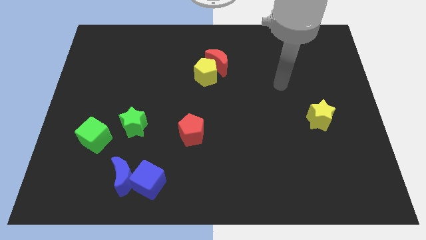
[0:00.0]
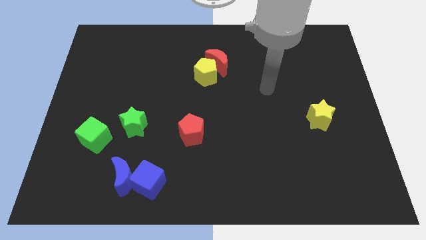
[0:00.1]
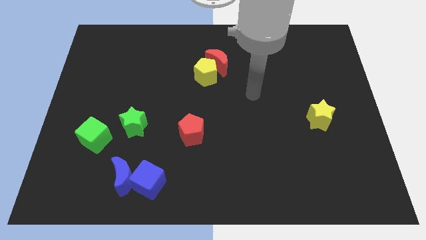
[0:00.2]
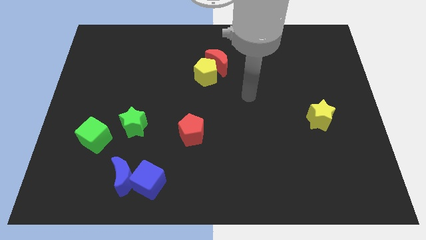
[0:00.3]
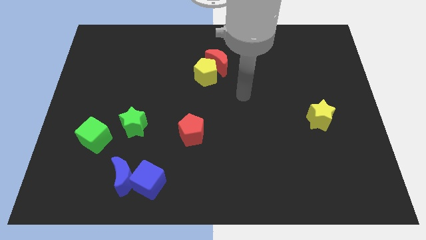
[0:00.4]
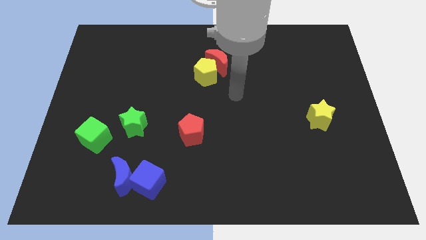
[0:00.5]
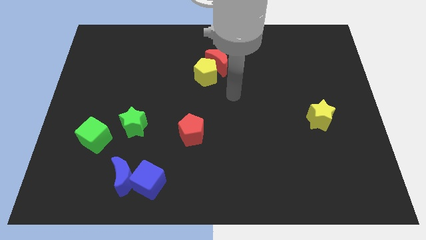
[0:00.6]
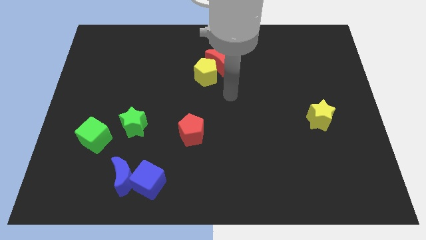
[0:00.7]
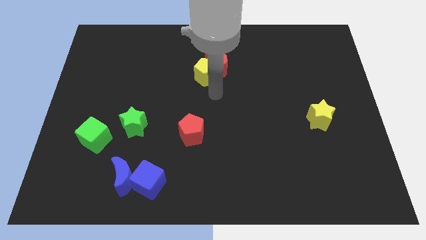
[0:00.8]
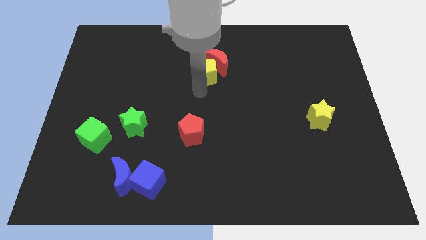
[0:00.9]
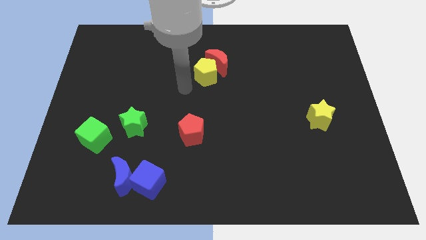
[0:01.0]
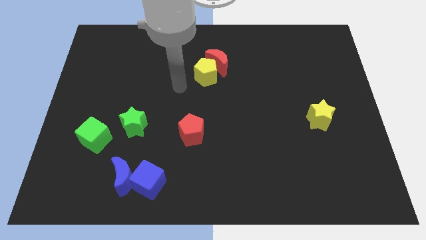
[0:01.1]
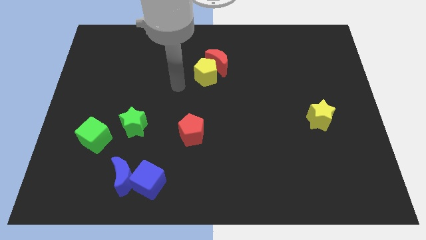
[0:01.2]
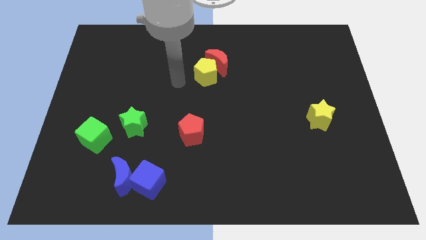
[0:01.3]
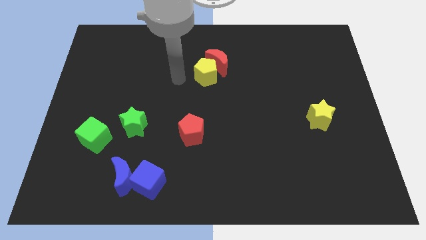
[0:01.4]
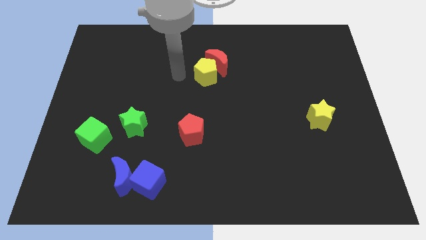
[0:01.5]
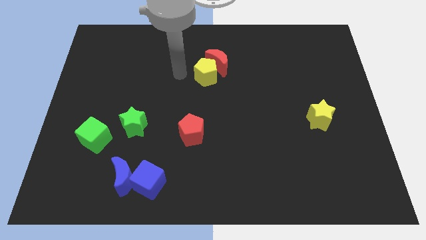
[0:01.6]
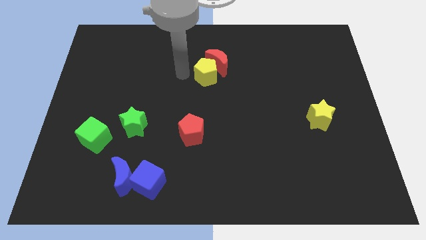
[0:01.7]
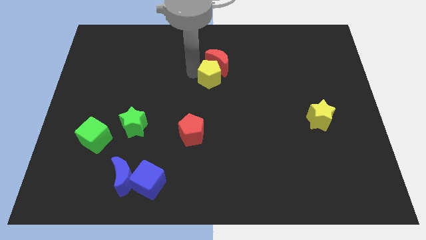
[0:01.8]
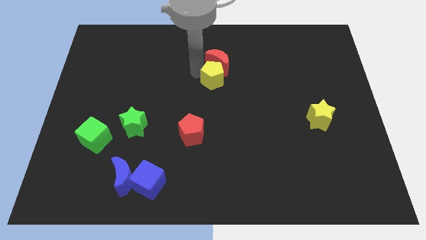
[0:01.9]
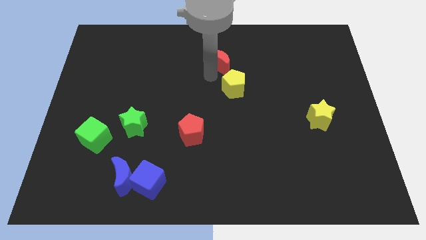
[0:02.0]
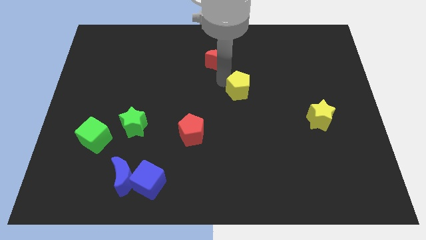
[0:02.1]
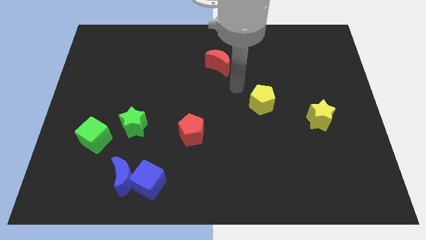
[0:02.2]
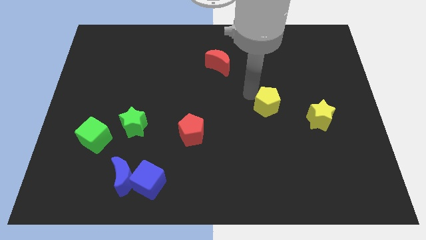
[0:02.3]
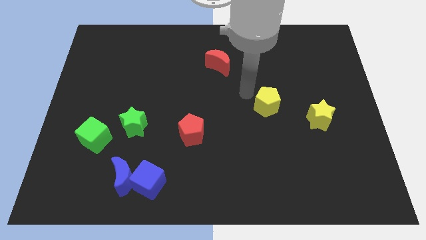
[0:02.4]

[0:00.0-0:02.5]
place the yellow pentagon in between the yellow star and red moon

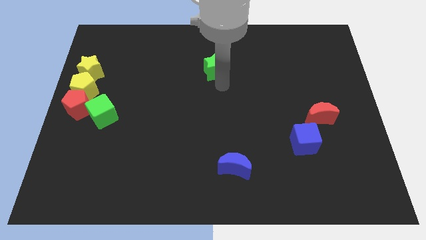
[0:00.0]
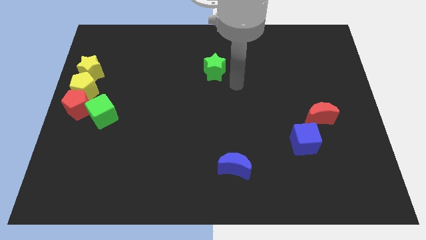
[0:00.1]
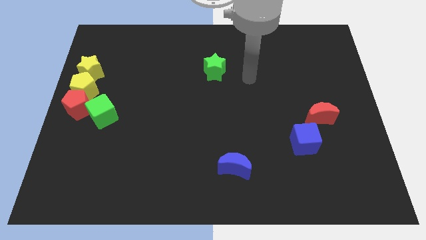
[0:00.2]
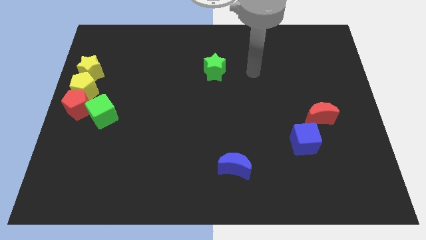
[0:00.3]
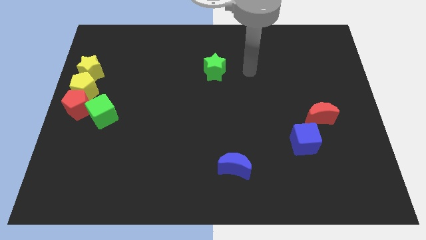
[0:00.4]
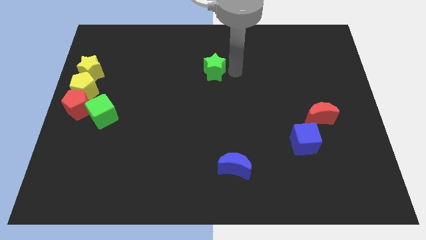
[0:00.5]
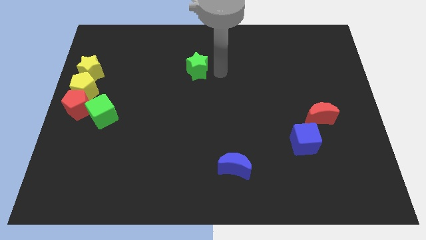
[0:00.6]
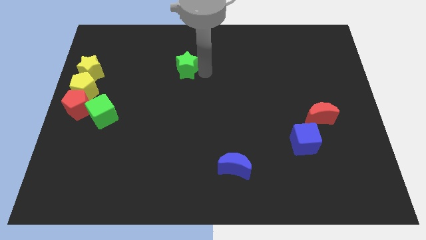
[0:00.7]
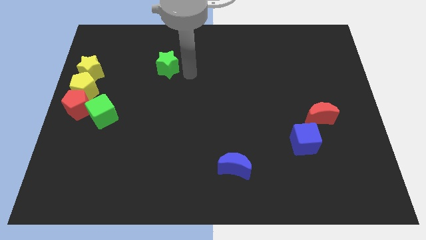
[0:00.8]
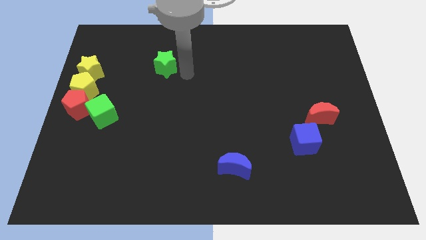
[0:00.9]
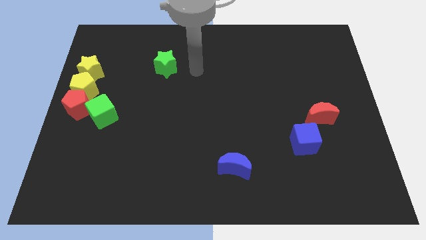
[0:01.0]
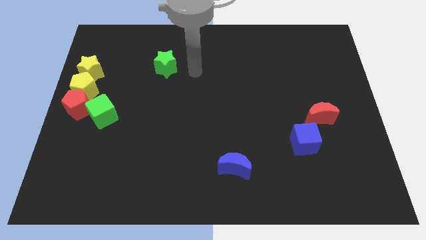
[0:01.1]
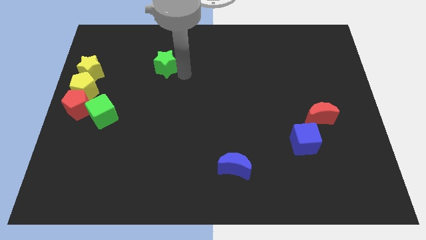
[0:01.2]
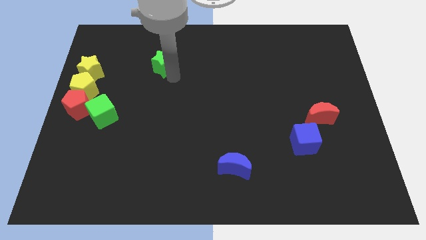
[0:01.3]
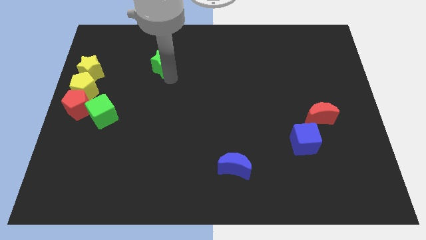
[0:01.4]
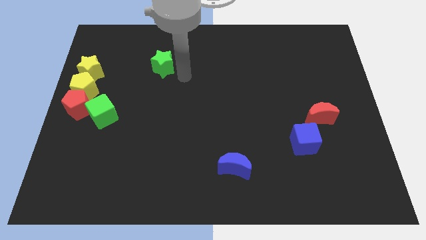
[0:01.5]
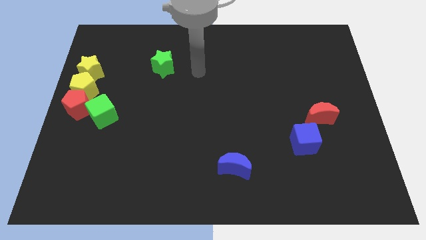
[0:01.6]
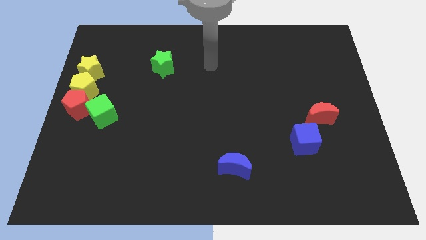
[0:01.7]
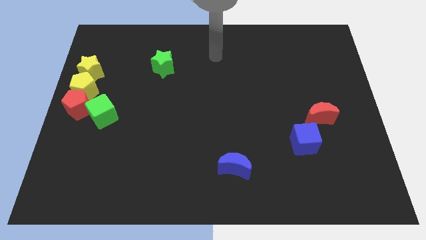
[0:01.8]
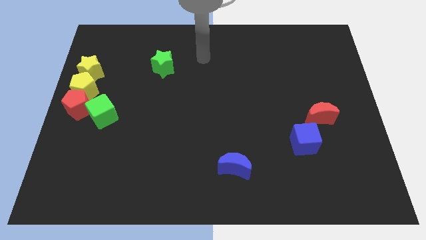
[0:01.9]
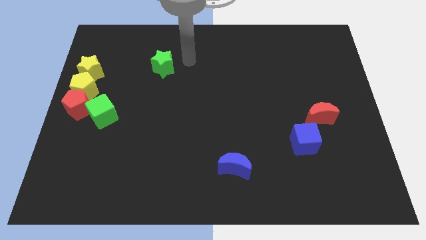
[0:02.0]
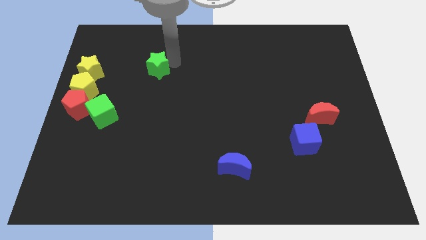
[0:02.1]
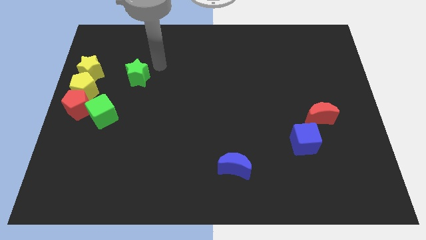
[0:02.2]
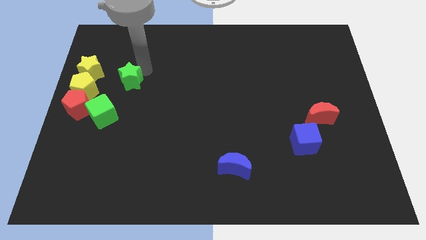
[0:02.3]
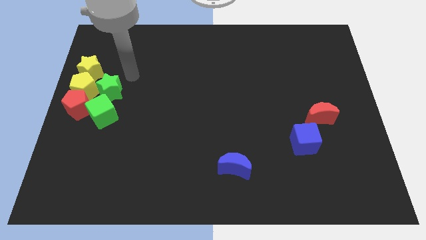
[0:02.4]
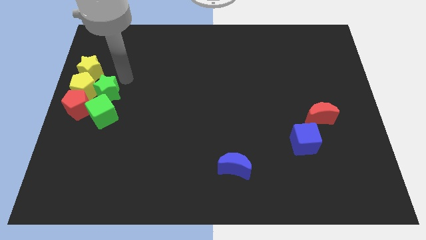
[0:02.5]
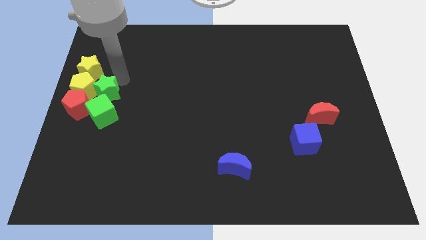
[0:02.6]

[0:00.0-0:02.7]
put green star above green cube

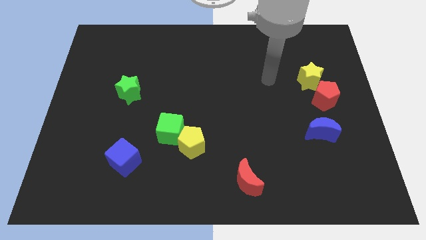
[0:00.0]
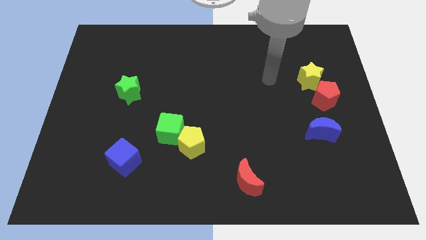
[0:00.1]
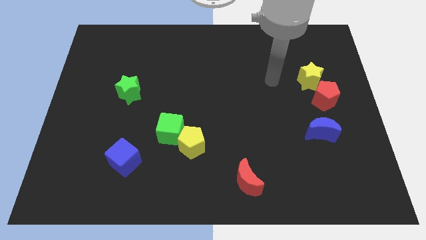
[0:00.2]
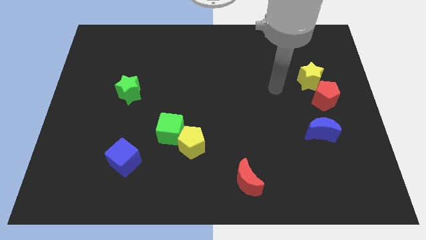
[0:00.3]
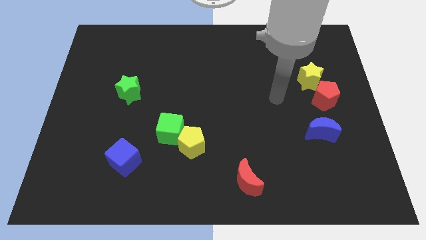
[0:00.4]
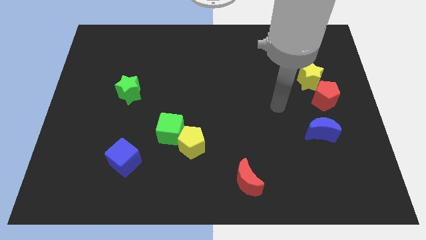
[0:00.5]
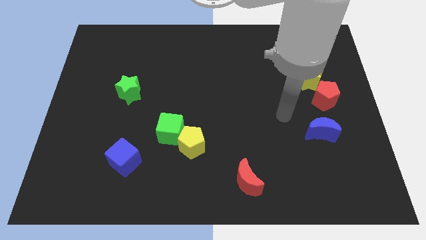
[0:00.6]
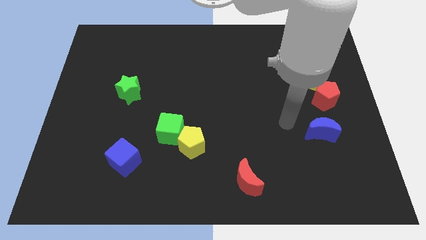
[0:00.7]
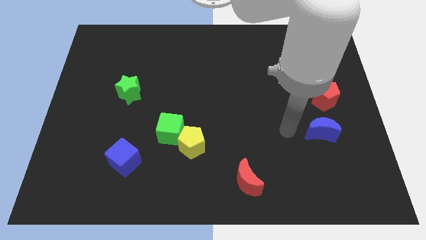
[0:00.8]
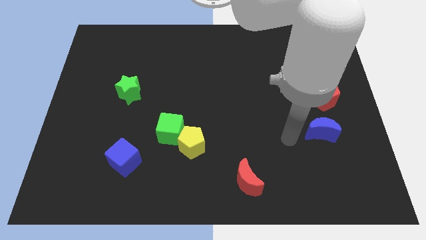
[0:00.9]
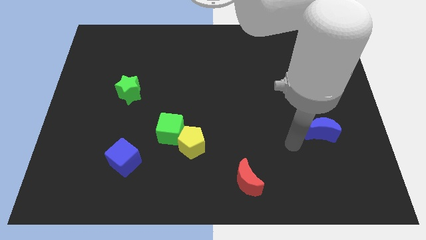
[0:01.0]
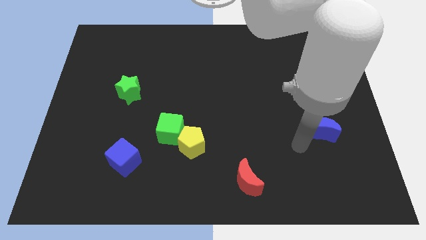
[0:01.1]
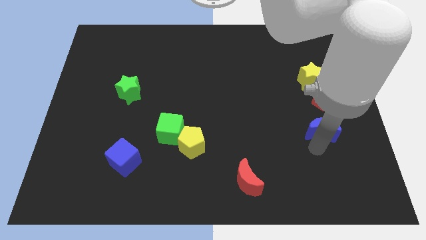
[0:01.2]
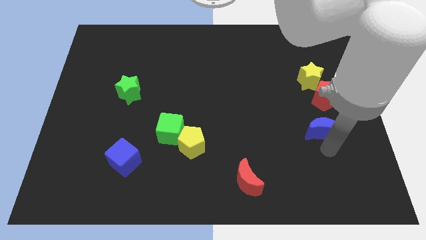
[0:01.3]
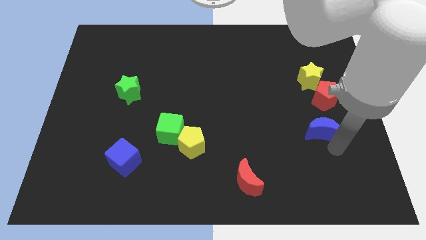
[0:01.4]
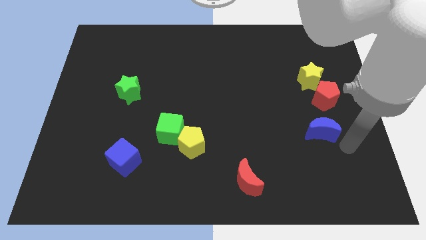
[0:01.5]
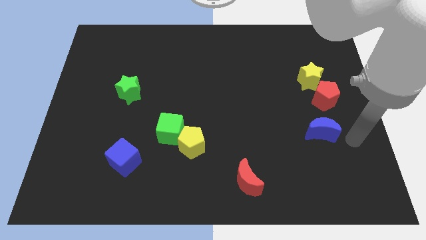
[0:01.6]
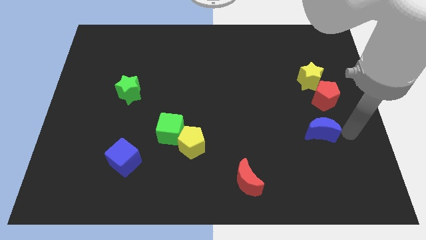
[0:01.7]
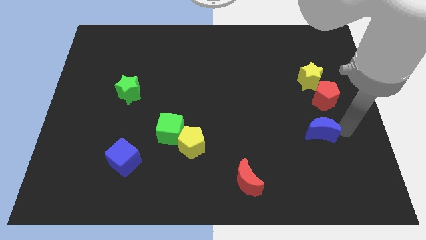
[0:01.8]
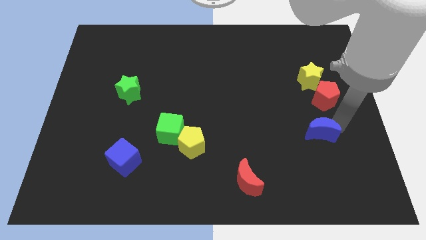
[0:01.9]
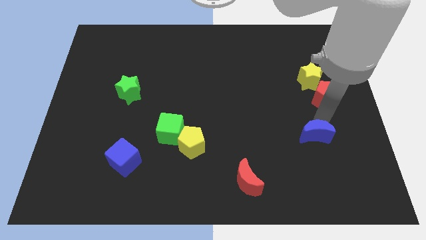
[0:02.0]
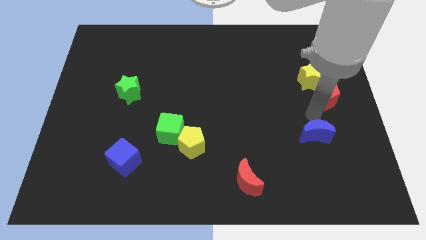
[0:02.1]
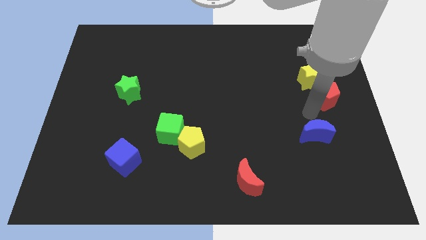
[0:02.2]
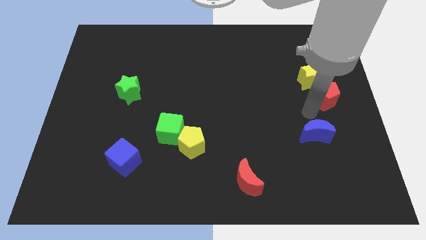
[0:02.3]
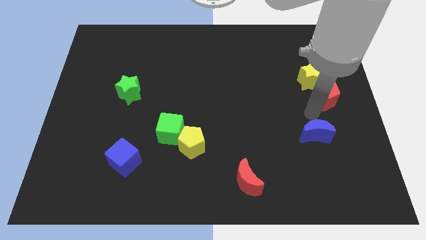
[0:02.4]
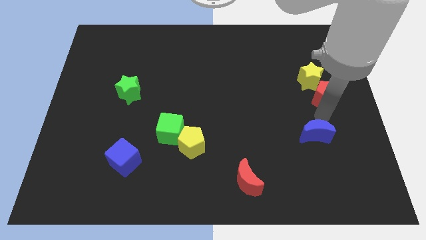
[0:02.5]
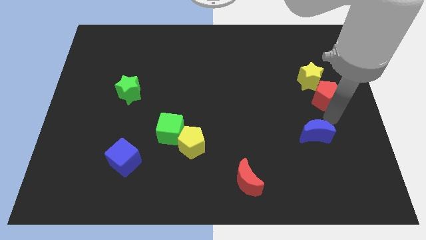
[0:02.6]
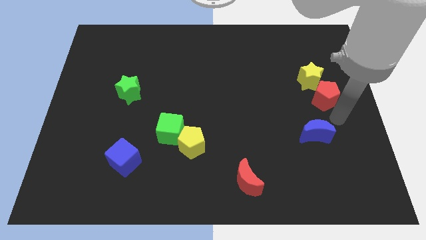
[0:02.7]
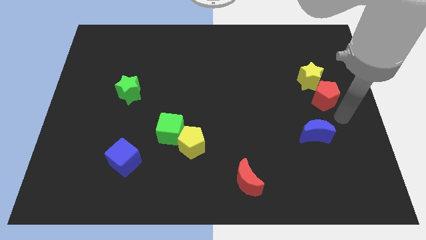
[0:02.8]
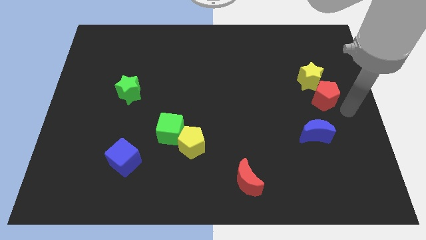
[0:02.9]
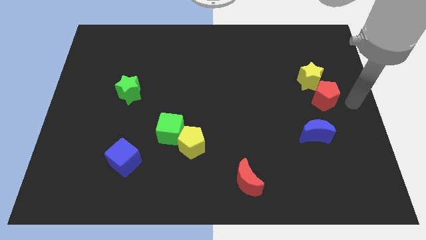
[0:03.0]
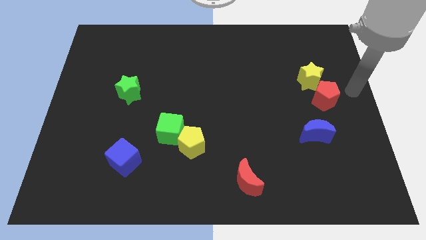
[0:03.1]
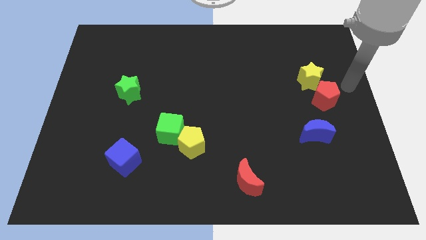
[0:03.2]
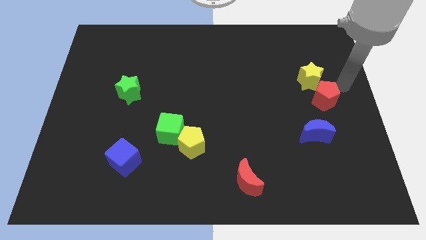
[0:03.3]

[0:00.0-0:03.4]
slide the blue crescent slightly to the left

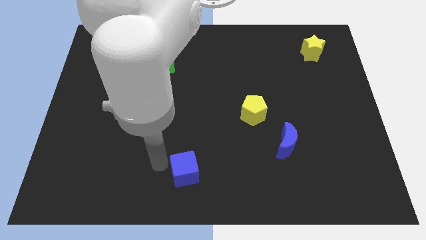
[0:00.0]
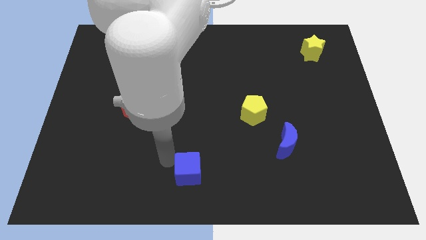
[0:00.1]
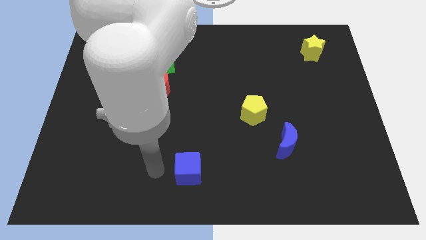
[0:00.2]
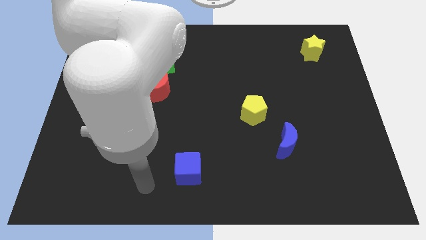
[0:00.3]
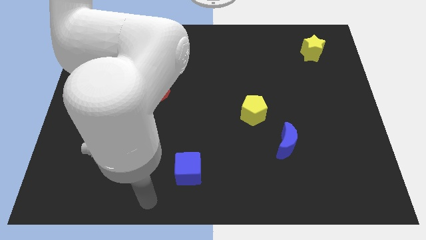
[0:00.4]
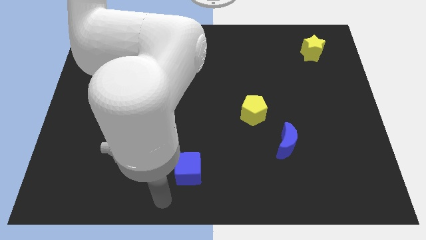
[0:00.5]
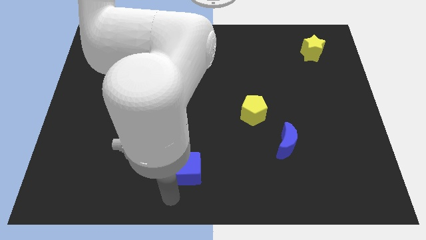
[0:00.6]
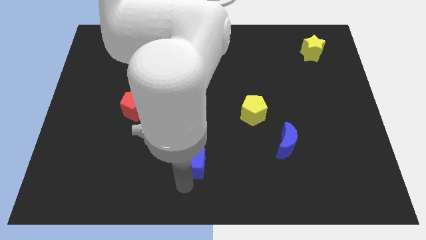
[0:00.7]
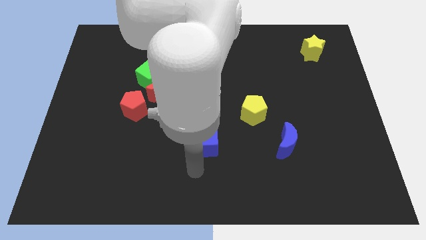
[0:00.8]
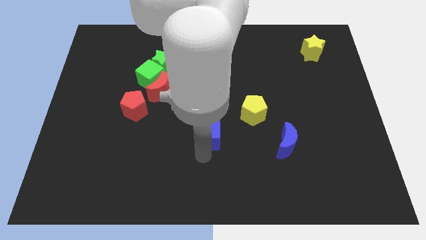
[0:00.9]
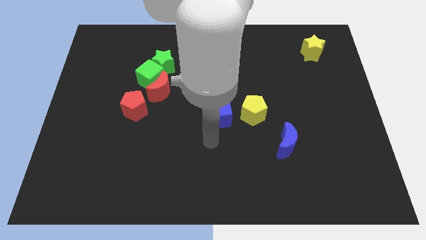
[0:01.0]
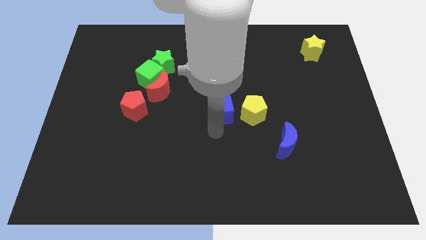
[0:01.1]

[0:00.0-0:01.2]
place the blue cube left to yellow pentagon
